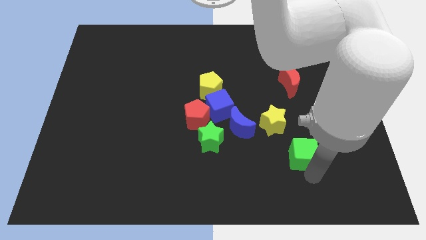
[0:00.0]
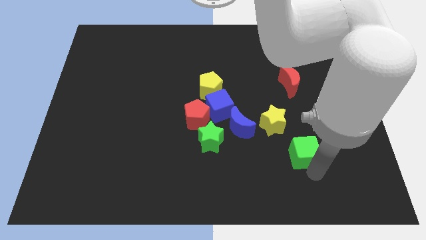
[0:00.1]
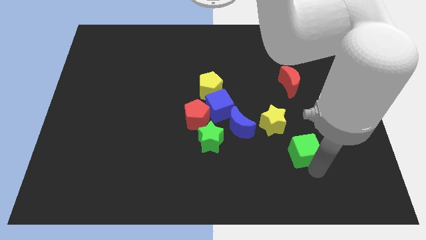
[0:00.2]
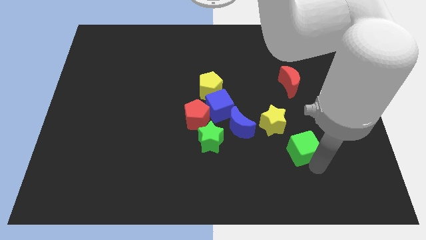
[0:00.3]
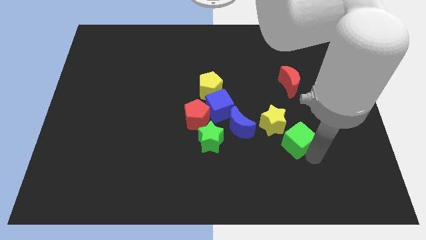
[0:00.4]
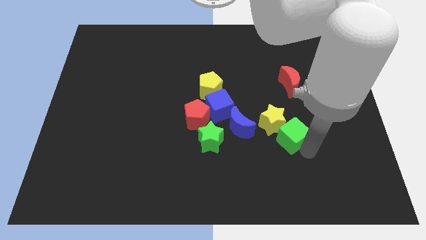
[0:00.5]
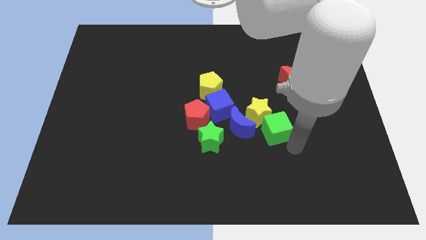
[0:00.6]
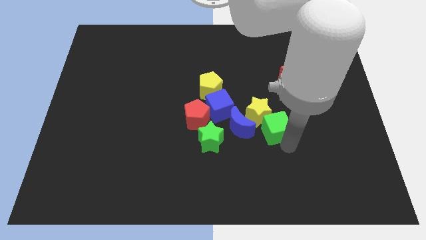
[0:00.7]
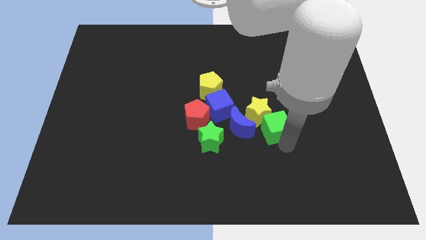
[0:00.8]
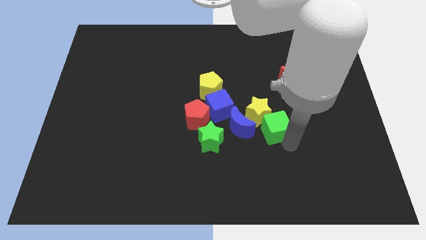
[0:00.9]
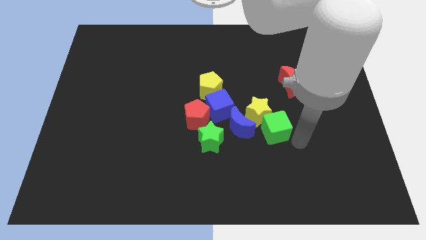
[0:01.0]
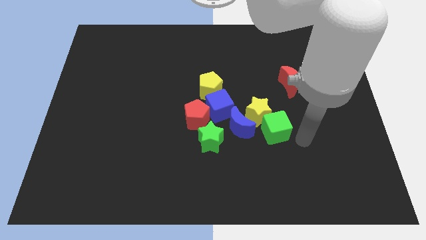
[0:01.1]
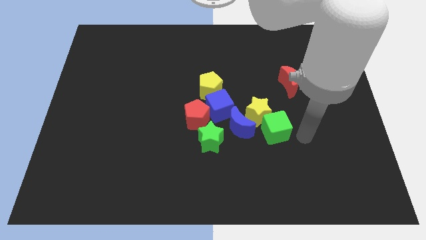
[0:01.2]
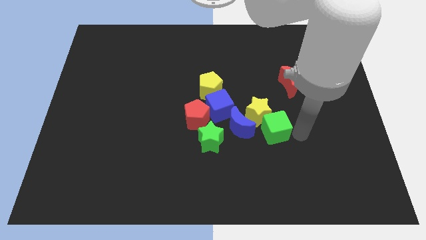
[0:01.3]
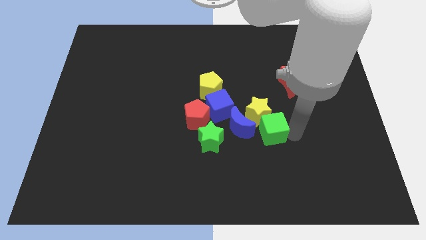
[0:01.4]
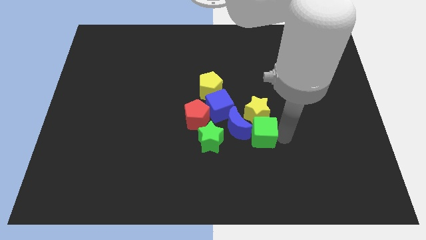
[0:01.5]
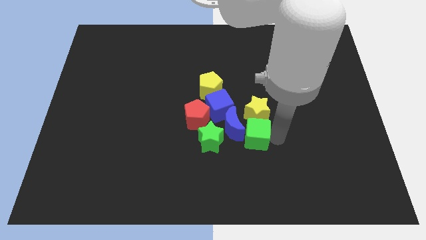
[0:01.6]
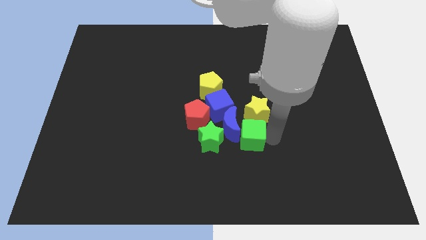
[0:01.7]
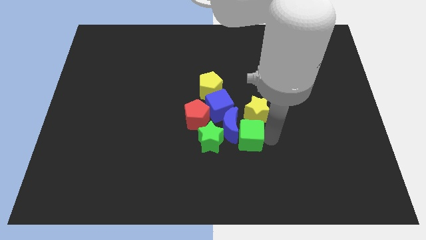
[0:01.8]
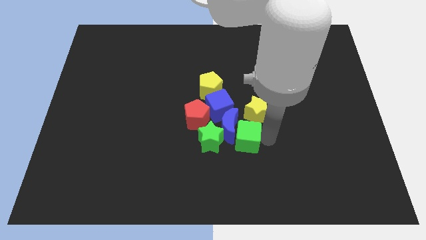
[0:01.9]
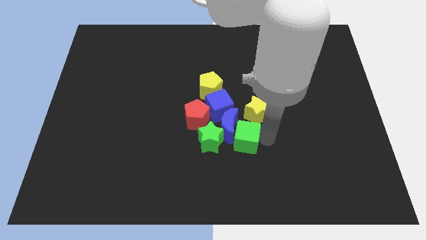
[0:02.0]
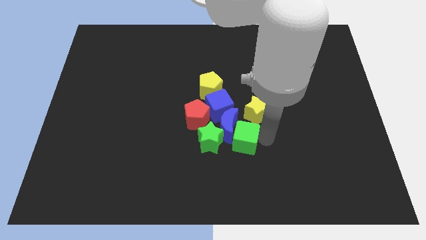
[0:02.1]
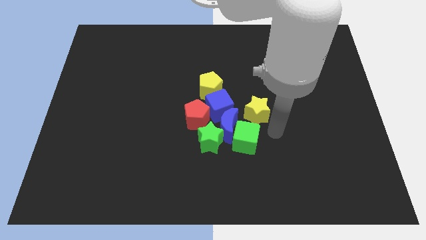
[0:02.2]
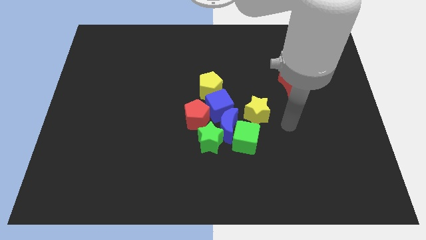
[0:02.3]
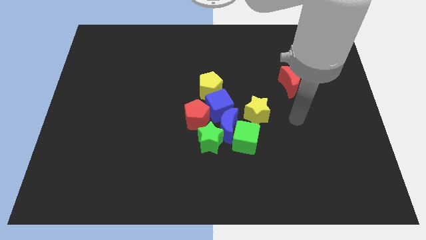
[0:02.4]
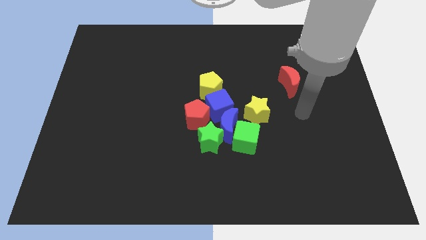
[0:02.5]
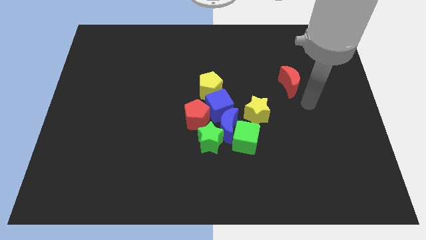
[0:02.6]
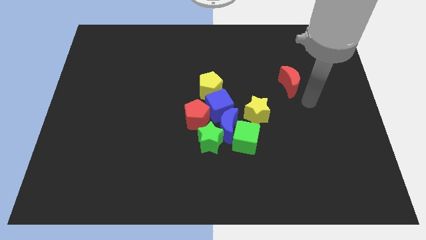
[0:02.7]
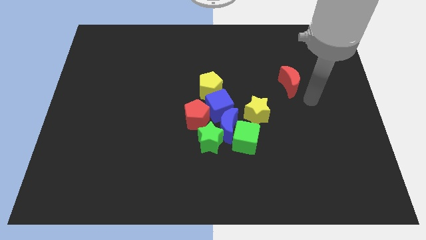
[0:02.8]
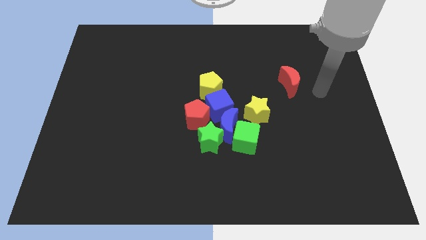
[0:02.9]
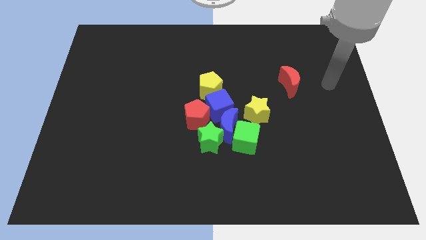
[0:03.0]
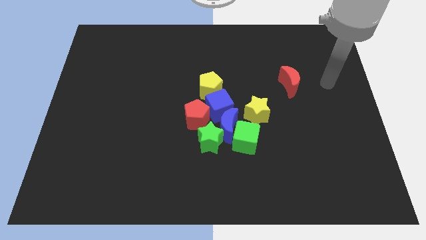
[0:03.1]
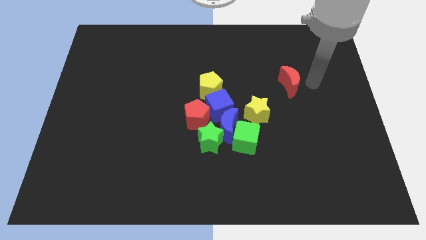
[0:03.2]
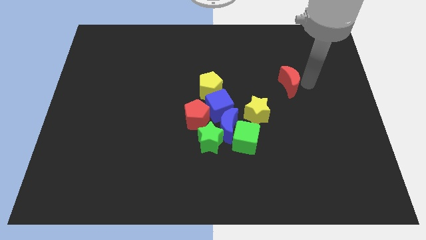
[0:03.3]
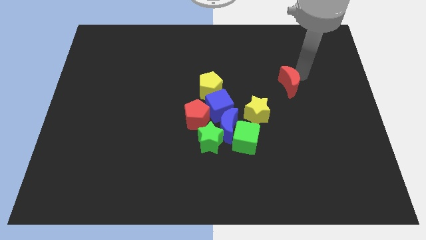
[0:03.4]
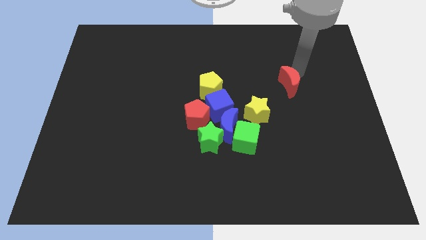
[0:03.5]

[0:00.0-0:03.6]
place your arm towards the right side of red crescent

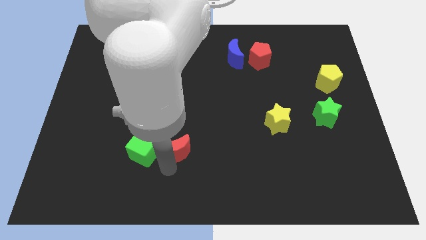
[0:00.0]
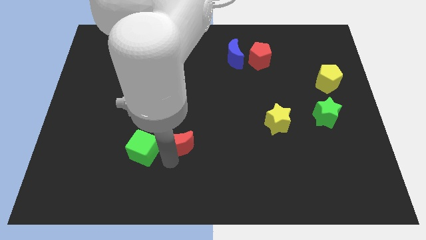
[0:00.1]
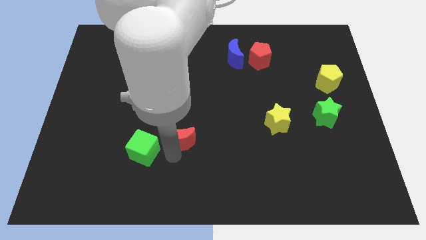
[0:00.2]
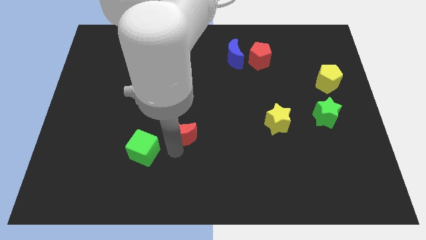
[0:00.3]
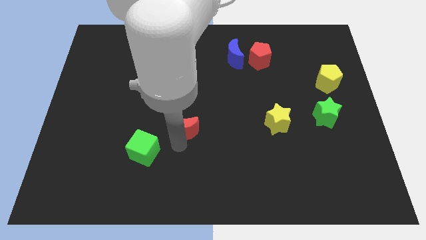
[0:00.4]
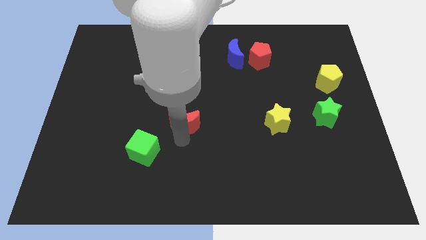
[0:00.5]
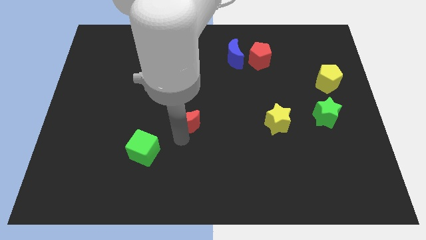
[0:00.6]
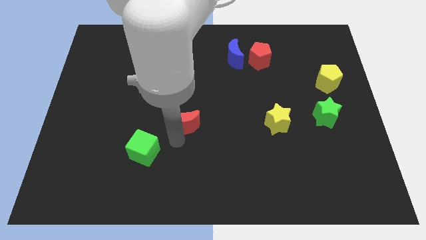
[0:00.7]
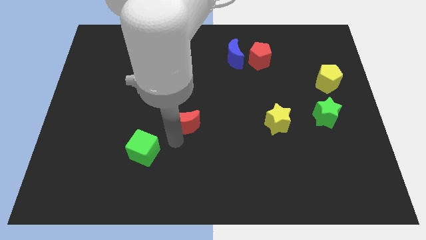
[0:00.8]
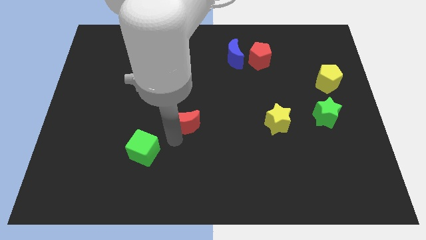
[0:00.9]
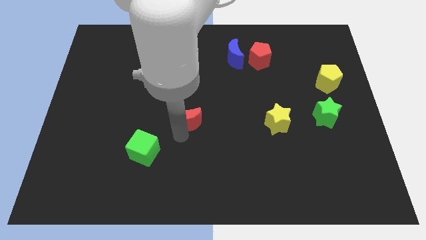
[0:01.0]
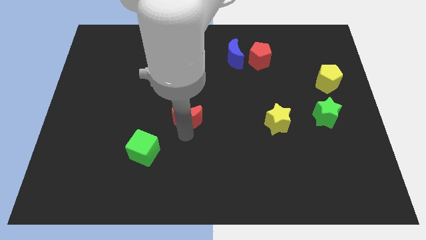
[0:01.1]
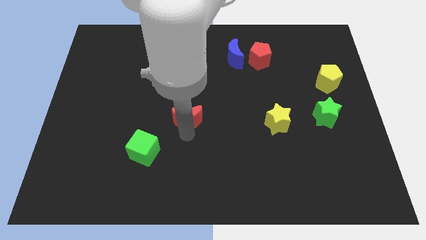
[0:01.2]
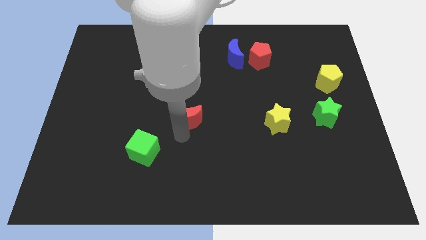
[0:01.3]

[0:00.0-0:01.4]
separate the red crescent from green cube

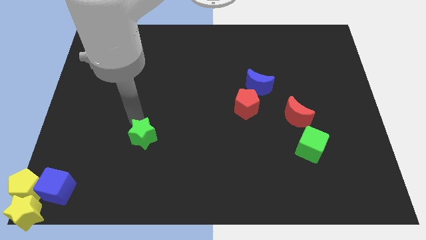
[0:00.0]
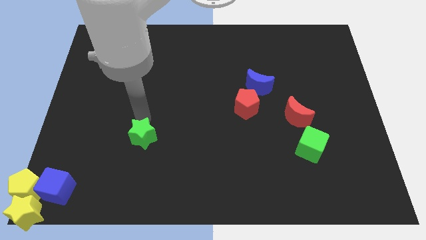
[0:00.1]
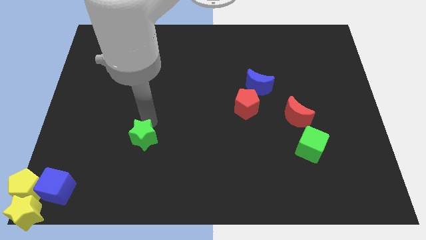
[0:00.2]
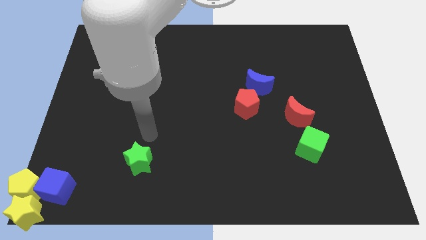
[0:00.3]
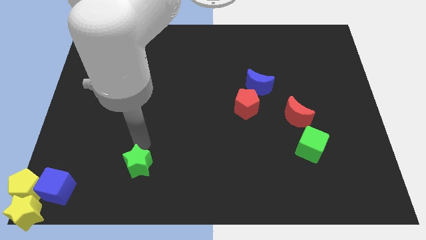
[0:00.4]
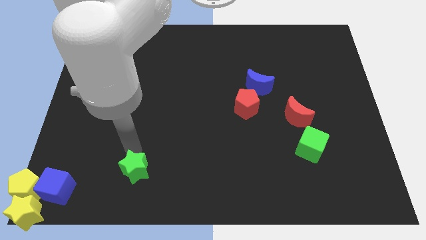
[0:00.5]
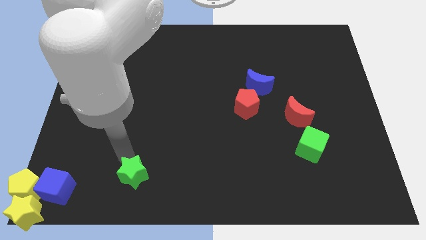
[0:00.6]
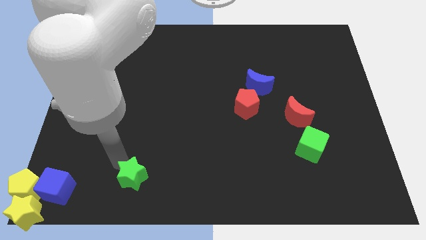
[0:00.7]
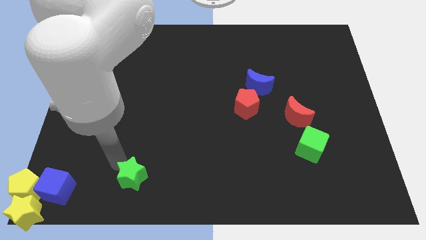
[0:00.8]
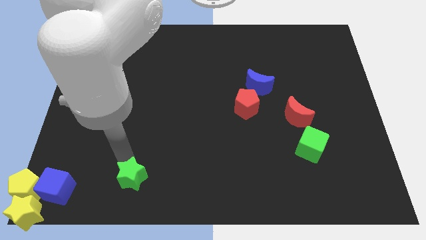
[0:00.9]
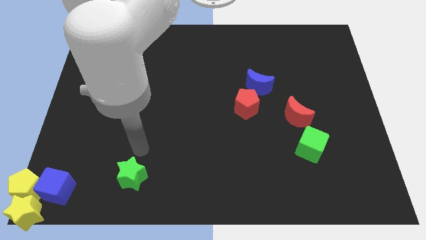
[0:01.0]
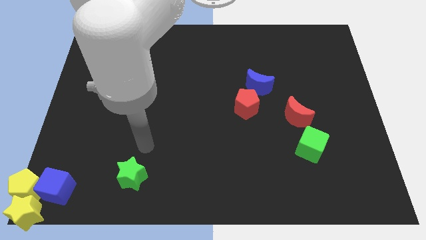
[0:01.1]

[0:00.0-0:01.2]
move the green star towards the bottom side of the board

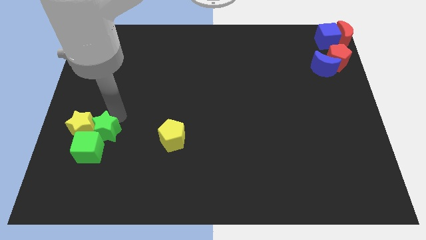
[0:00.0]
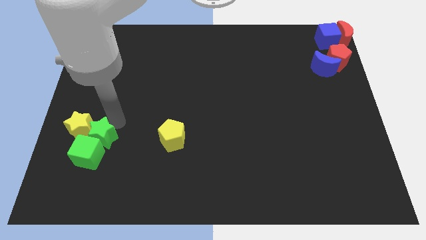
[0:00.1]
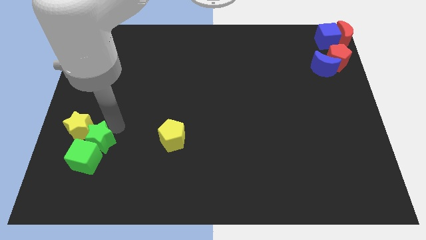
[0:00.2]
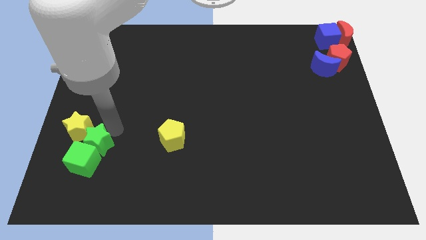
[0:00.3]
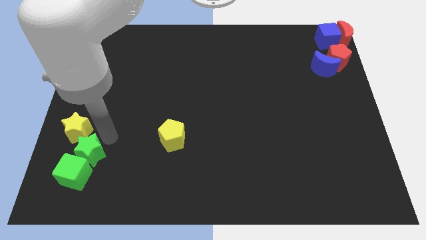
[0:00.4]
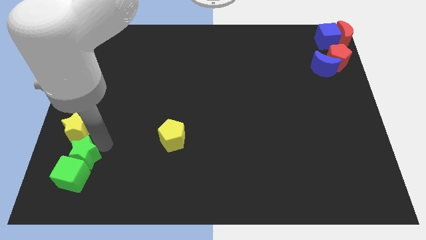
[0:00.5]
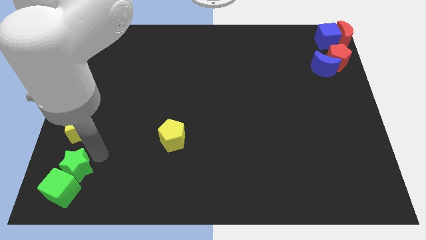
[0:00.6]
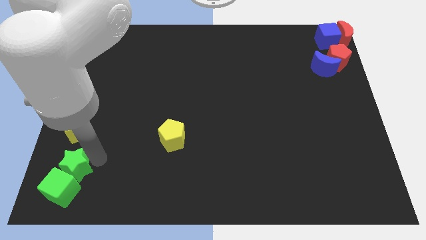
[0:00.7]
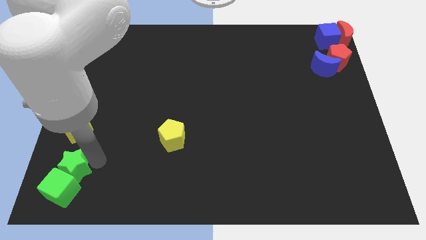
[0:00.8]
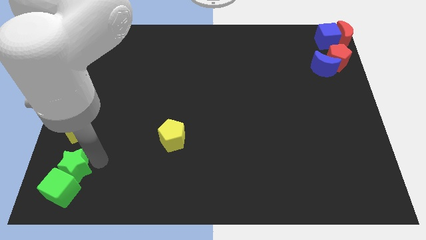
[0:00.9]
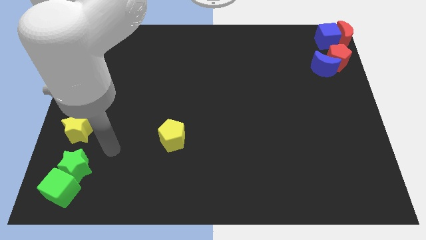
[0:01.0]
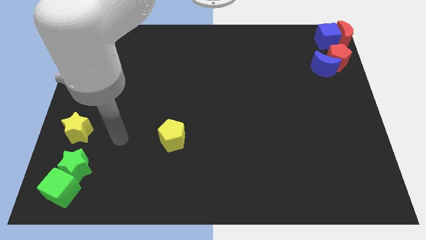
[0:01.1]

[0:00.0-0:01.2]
move the green cubegreen star towards the bottom left corner of the board

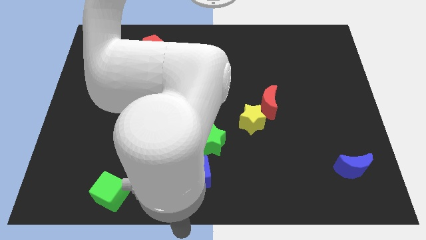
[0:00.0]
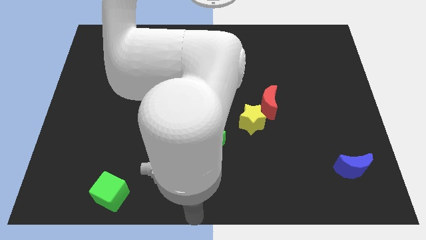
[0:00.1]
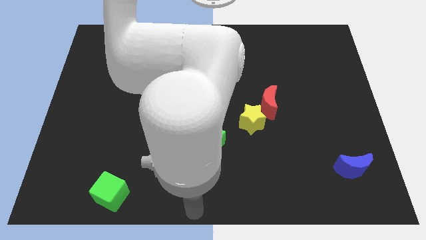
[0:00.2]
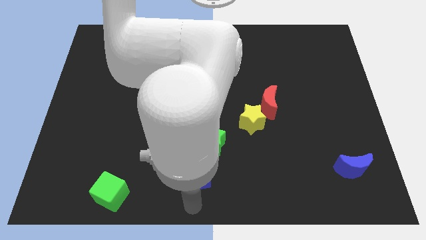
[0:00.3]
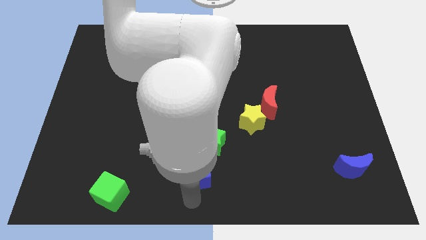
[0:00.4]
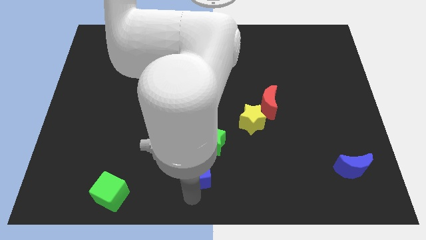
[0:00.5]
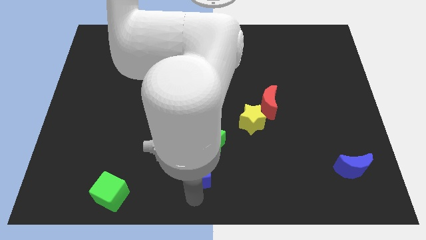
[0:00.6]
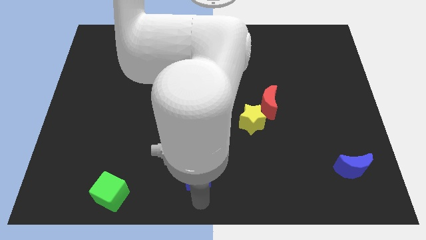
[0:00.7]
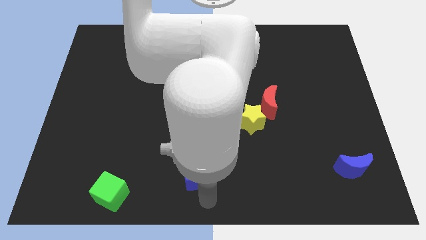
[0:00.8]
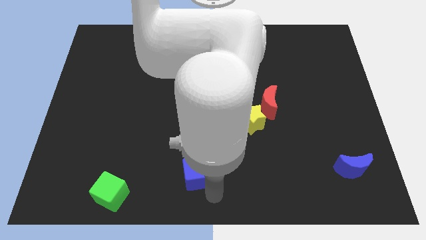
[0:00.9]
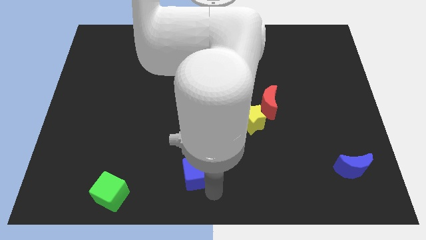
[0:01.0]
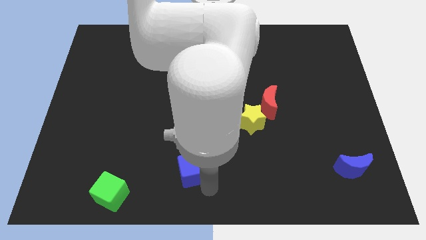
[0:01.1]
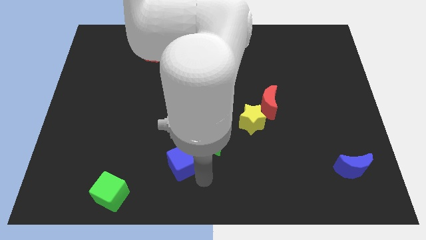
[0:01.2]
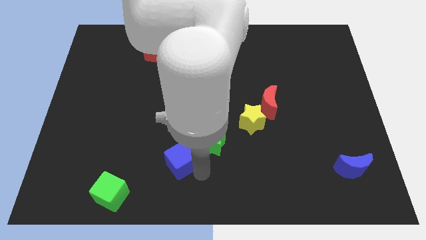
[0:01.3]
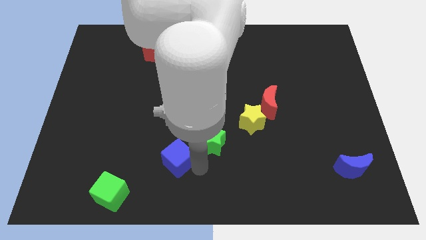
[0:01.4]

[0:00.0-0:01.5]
push the cube slightly to the top
